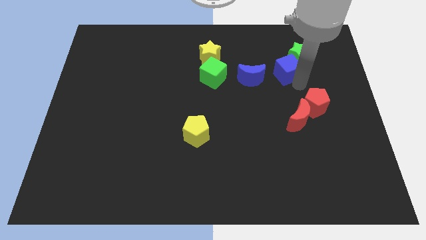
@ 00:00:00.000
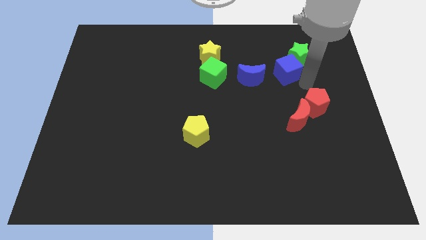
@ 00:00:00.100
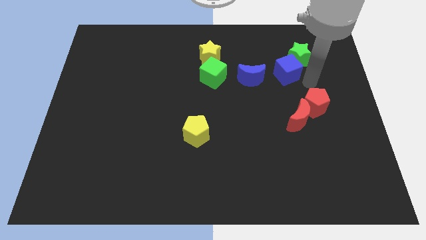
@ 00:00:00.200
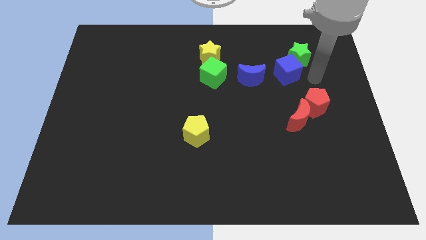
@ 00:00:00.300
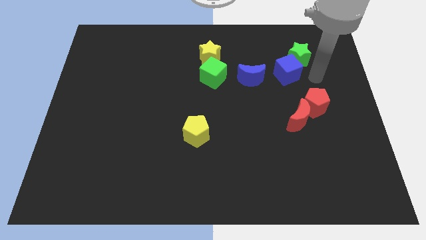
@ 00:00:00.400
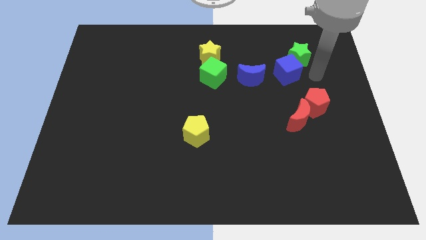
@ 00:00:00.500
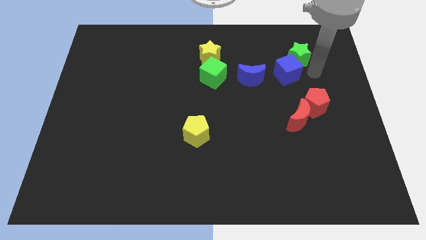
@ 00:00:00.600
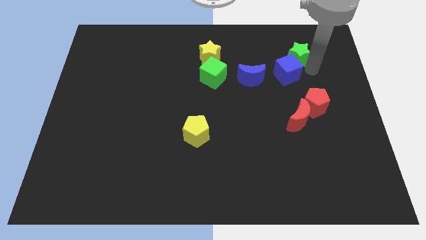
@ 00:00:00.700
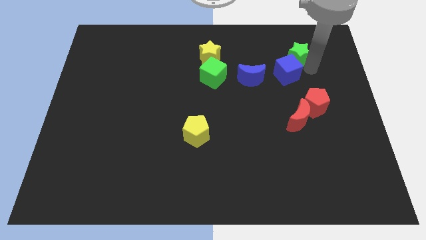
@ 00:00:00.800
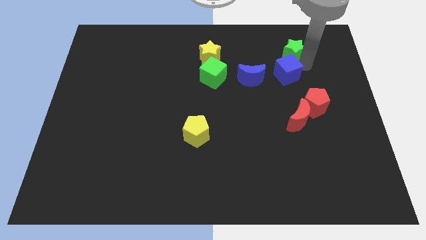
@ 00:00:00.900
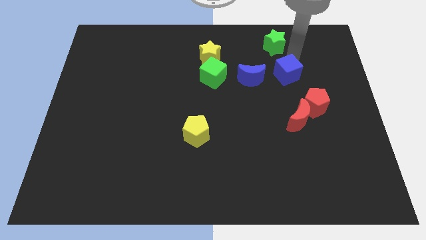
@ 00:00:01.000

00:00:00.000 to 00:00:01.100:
move green star slightly to the left

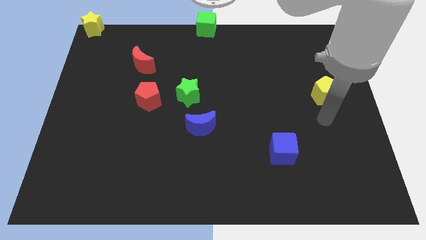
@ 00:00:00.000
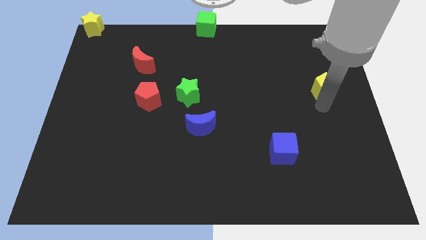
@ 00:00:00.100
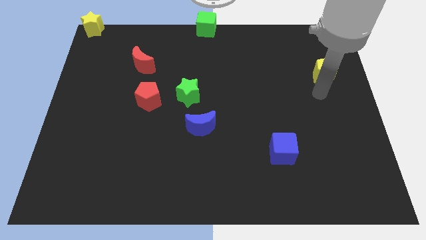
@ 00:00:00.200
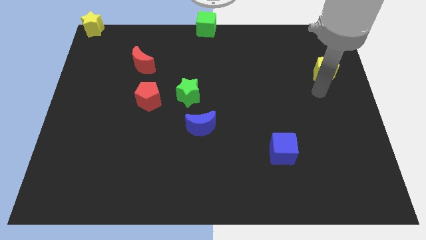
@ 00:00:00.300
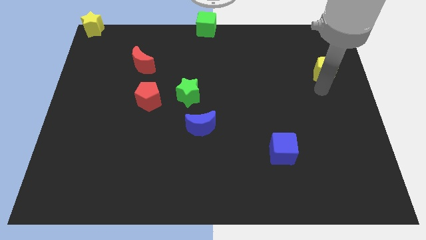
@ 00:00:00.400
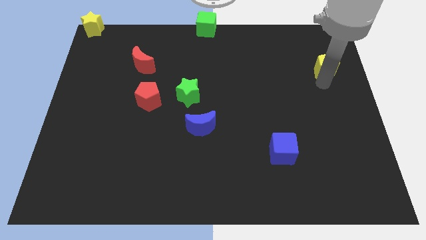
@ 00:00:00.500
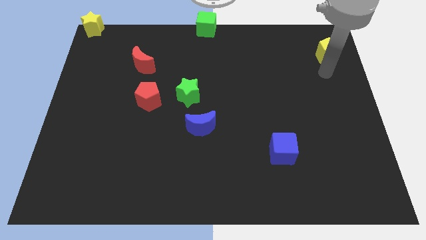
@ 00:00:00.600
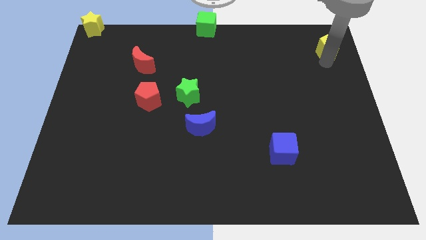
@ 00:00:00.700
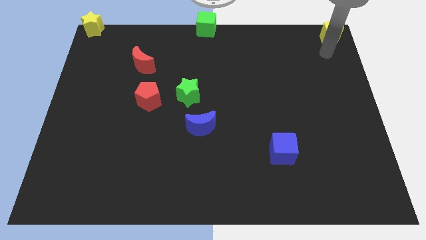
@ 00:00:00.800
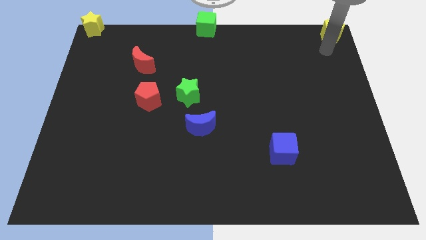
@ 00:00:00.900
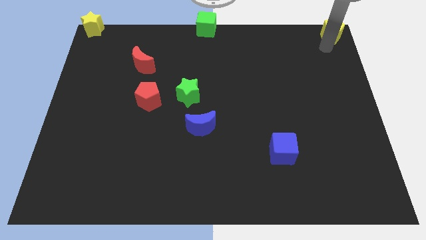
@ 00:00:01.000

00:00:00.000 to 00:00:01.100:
move yellow pentagon to top right

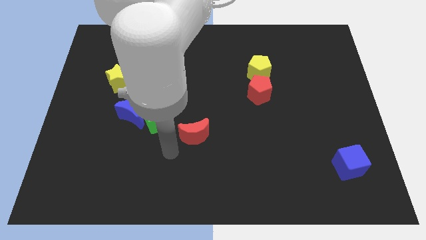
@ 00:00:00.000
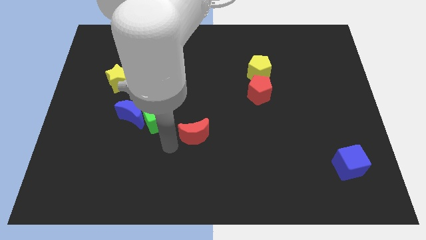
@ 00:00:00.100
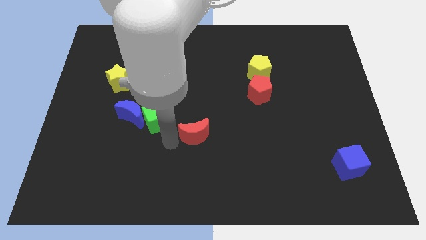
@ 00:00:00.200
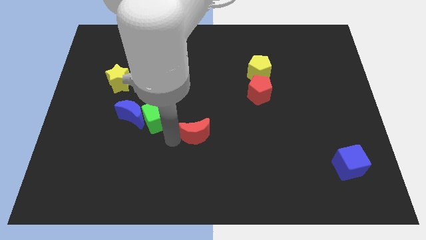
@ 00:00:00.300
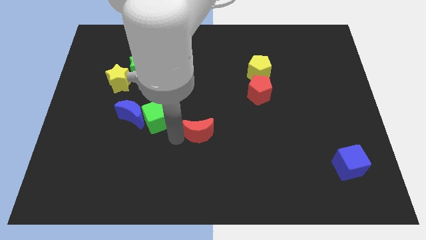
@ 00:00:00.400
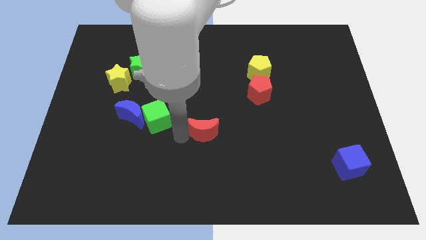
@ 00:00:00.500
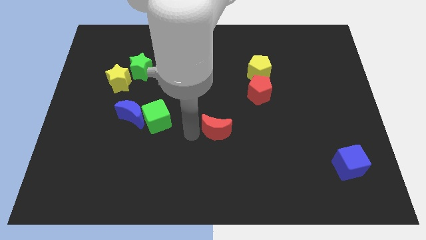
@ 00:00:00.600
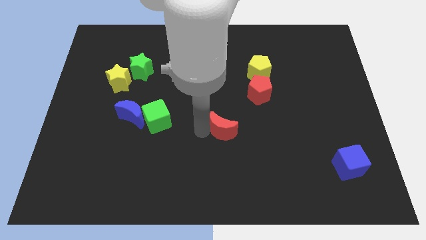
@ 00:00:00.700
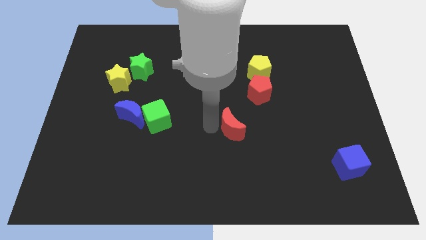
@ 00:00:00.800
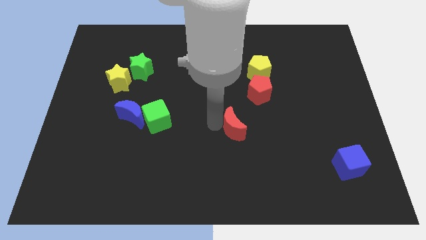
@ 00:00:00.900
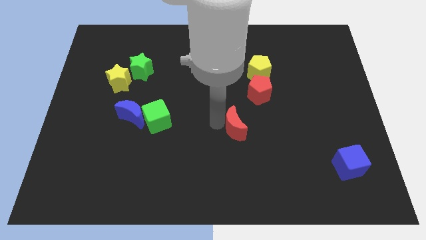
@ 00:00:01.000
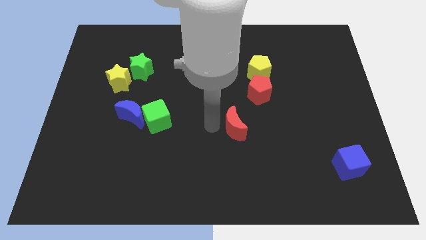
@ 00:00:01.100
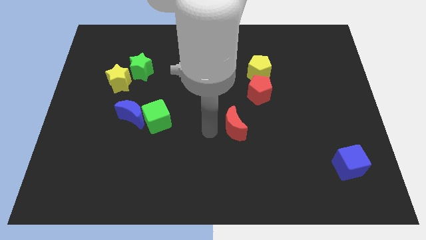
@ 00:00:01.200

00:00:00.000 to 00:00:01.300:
push the red crescent towards the right side of the board

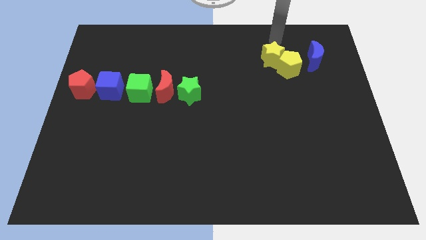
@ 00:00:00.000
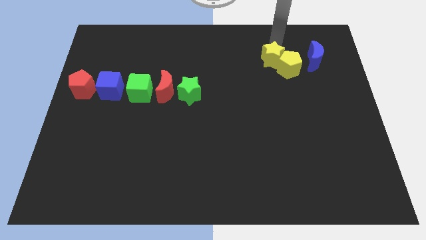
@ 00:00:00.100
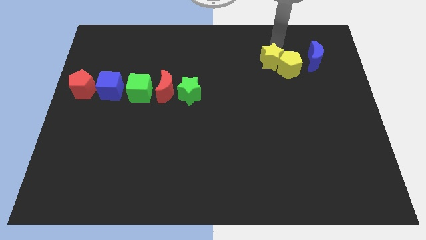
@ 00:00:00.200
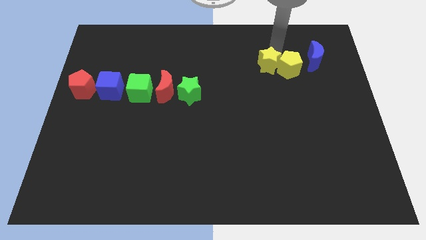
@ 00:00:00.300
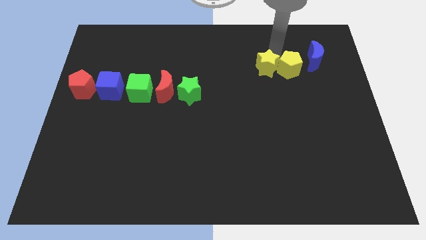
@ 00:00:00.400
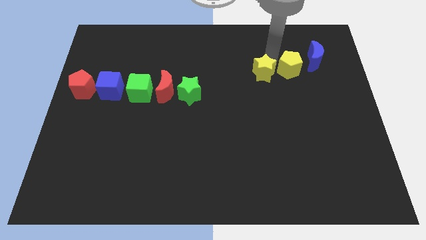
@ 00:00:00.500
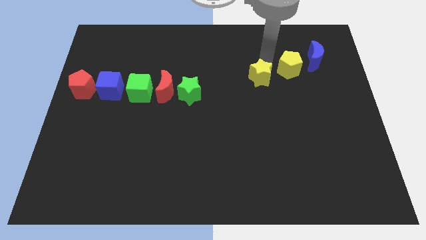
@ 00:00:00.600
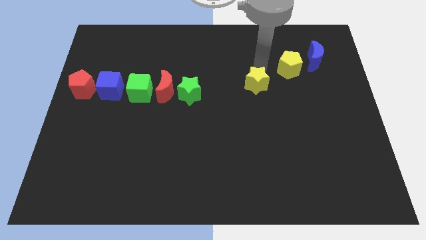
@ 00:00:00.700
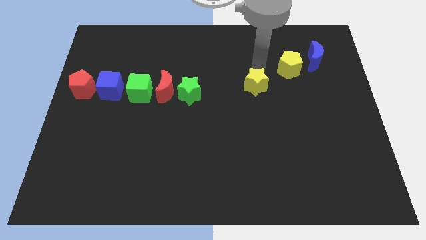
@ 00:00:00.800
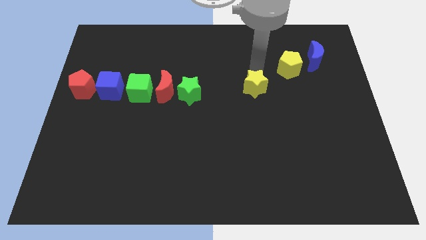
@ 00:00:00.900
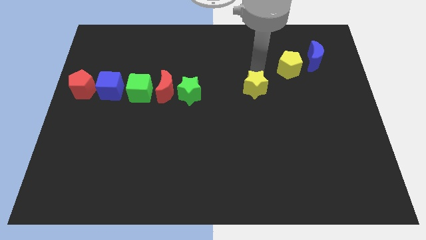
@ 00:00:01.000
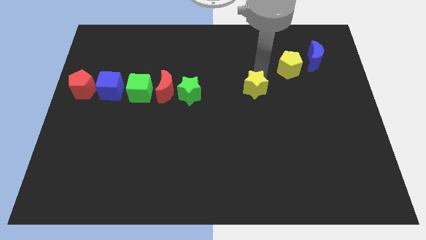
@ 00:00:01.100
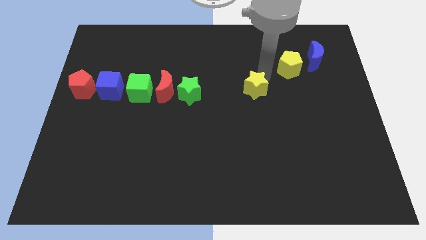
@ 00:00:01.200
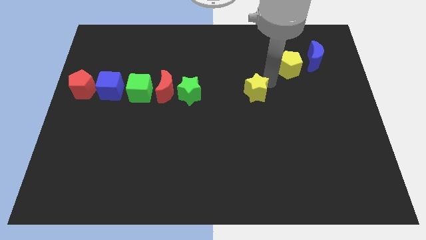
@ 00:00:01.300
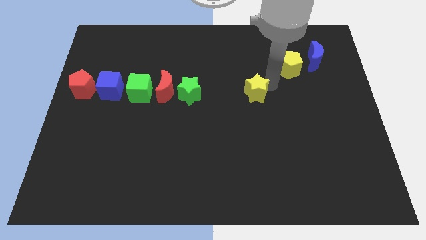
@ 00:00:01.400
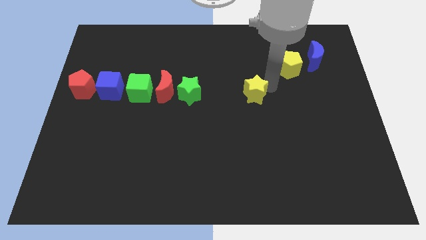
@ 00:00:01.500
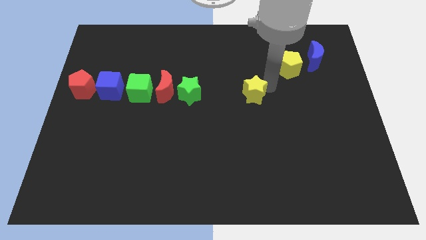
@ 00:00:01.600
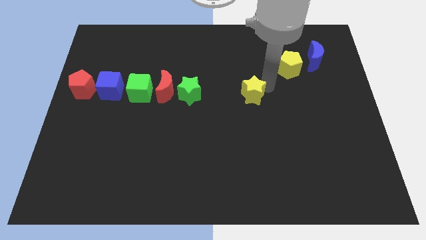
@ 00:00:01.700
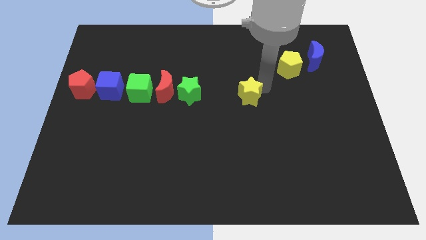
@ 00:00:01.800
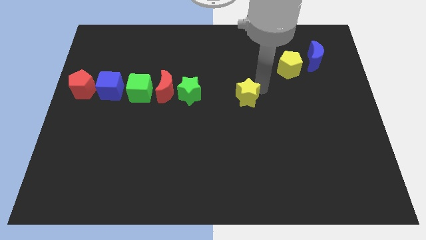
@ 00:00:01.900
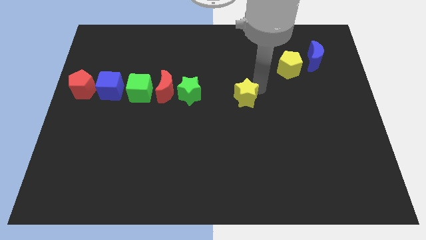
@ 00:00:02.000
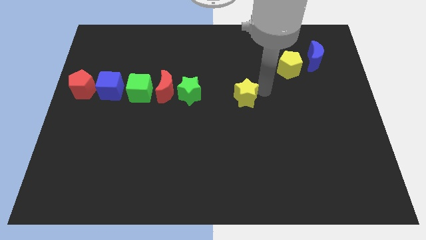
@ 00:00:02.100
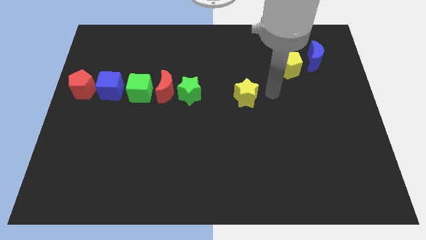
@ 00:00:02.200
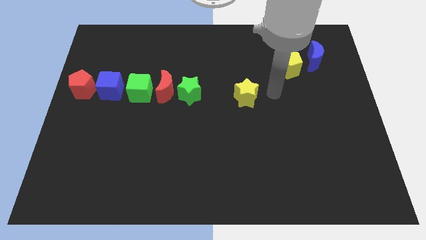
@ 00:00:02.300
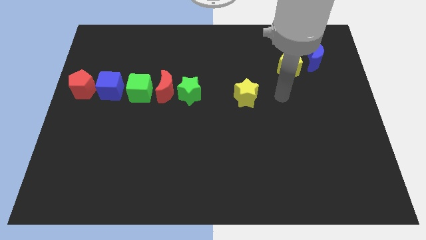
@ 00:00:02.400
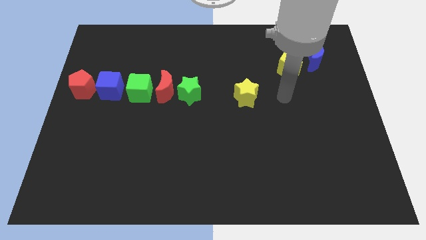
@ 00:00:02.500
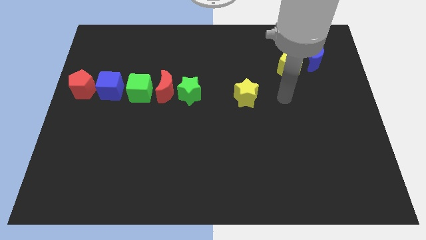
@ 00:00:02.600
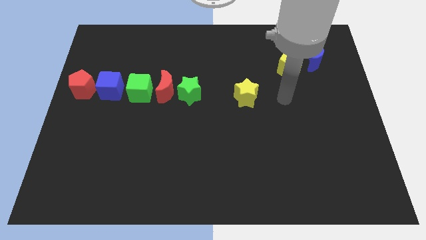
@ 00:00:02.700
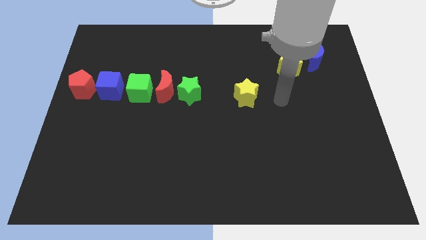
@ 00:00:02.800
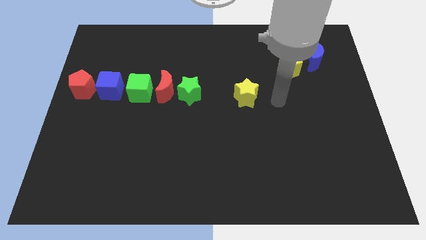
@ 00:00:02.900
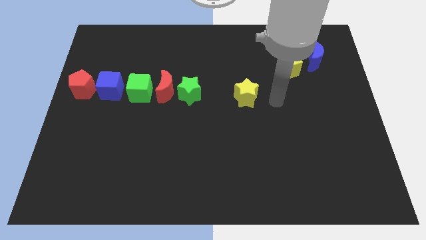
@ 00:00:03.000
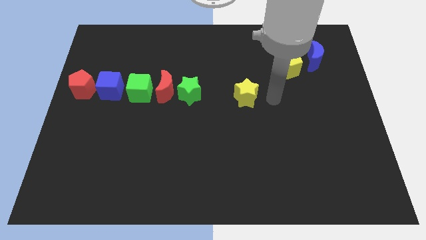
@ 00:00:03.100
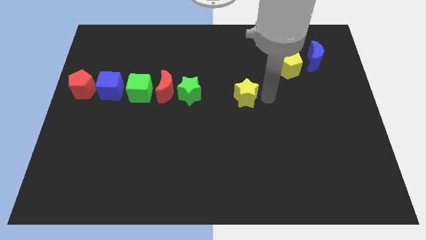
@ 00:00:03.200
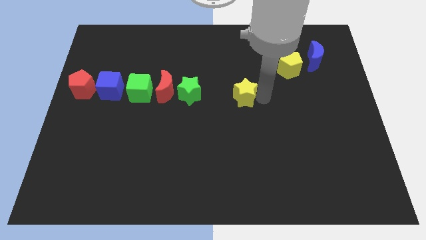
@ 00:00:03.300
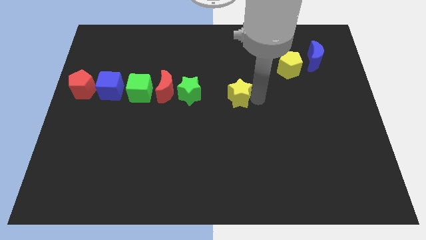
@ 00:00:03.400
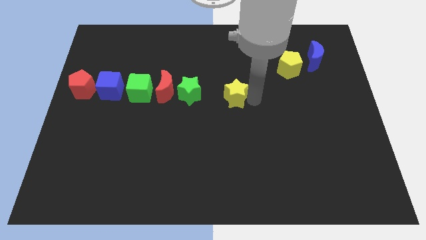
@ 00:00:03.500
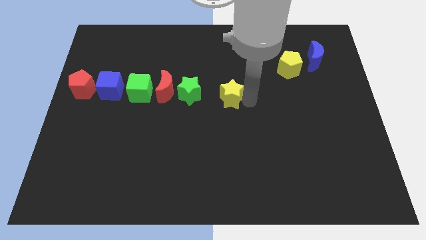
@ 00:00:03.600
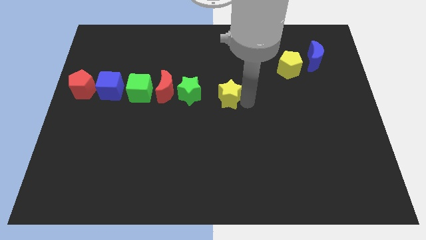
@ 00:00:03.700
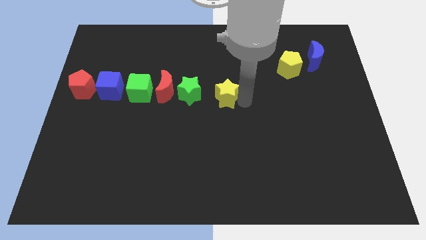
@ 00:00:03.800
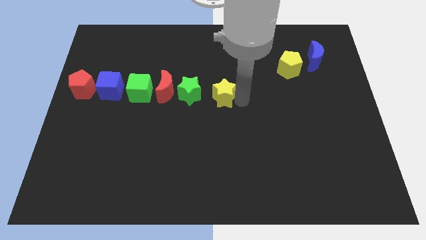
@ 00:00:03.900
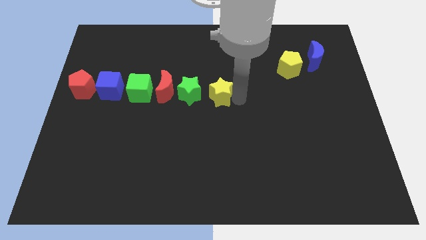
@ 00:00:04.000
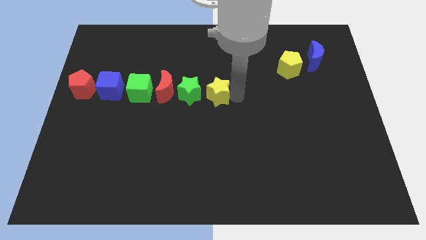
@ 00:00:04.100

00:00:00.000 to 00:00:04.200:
move the yellow star towards the center of the board

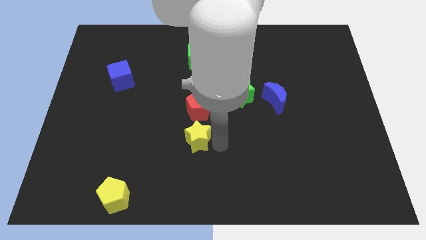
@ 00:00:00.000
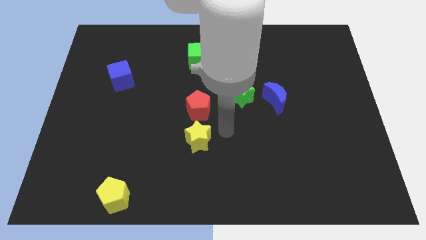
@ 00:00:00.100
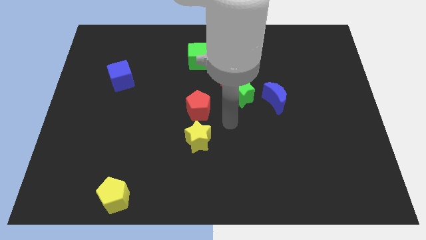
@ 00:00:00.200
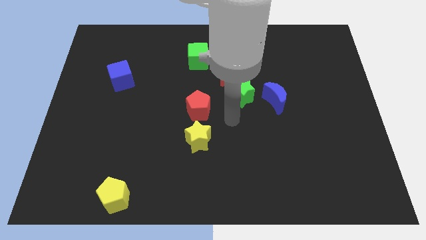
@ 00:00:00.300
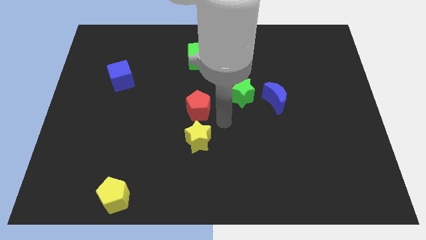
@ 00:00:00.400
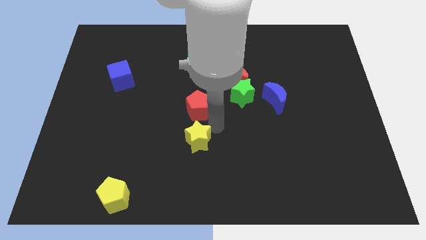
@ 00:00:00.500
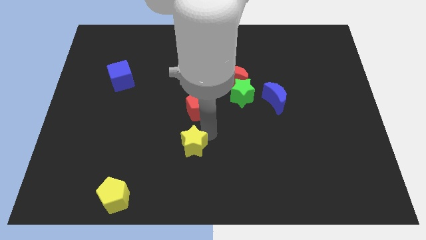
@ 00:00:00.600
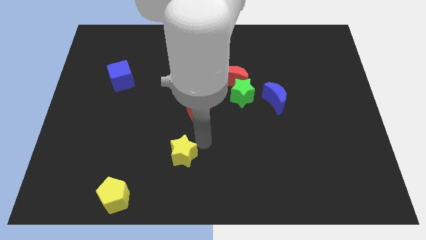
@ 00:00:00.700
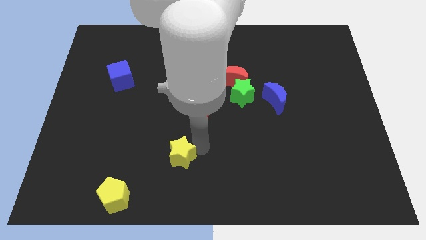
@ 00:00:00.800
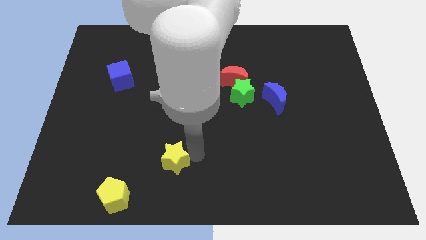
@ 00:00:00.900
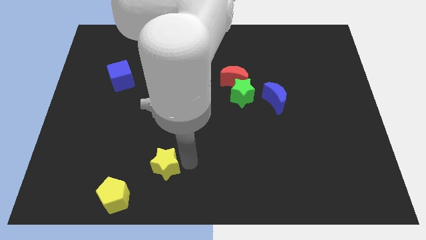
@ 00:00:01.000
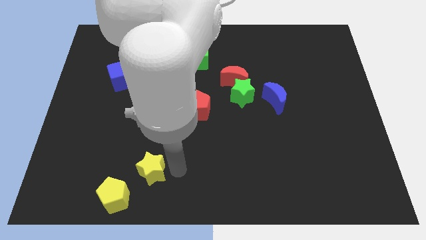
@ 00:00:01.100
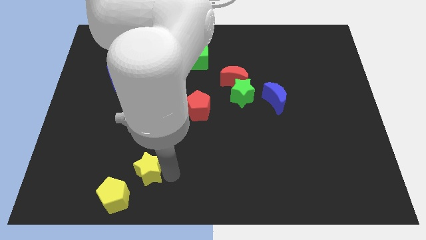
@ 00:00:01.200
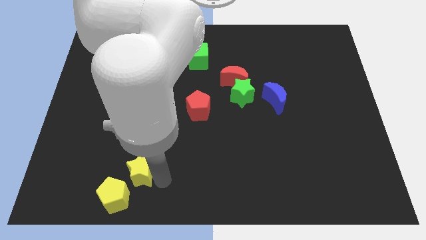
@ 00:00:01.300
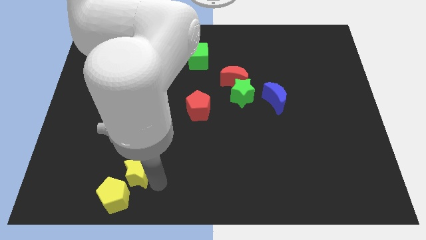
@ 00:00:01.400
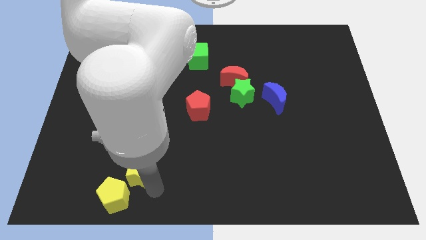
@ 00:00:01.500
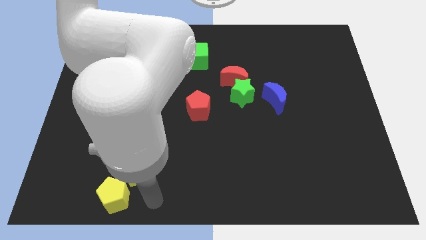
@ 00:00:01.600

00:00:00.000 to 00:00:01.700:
push the yellow star into the yellow pentagon
